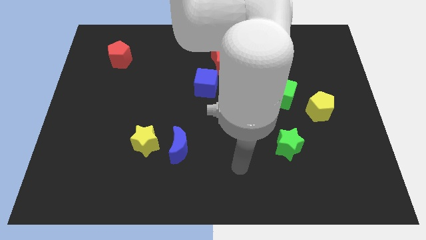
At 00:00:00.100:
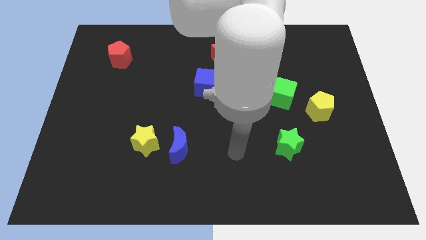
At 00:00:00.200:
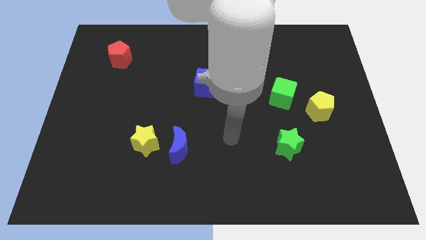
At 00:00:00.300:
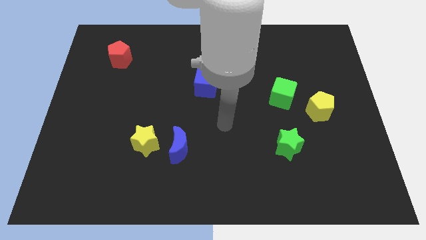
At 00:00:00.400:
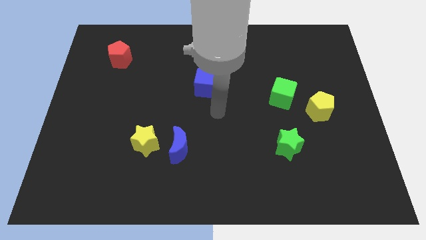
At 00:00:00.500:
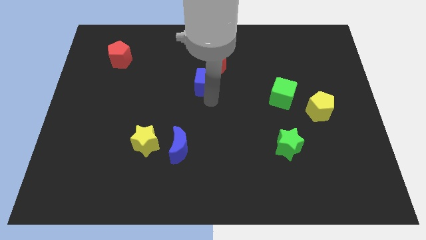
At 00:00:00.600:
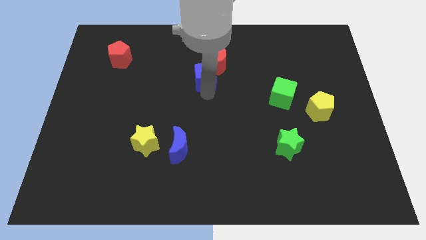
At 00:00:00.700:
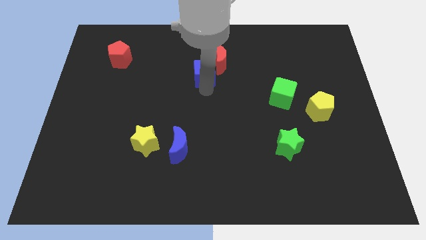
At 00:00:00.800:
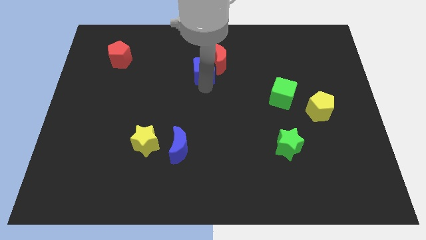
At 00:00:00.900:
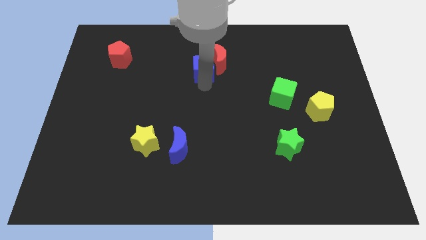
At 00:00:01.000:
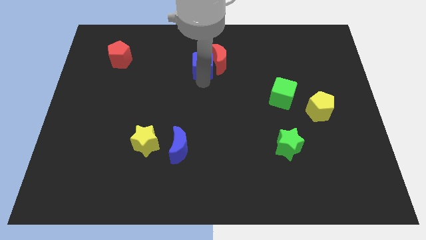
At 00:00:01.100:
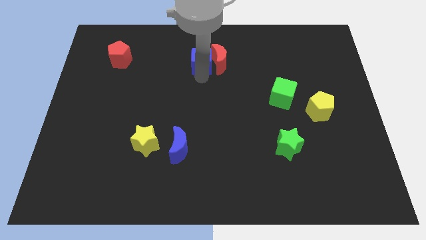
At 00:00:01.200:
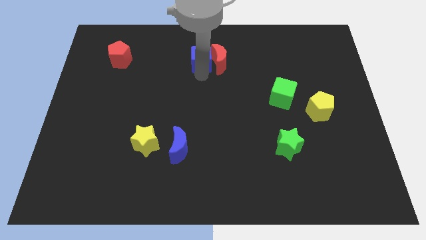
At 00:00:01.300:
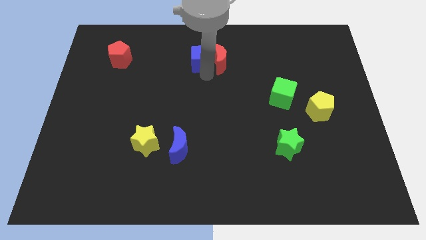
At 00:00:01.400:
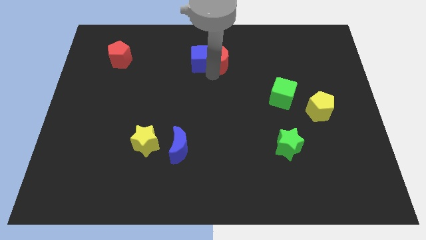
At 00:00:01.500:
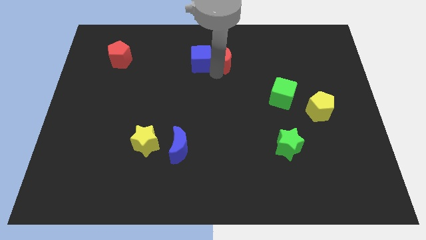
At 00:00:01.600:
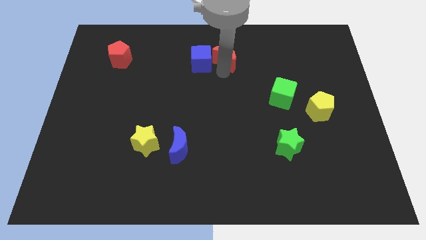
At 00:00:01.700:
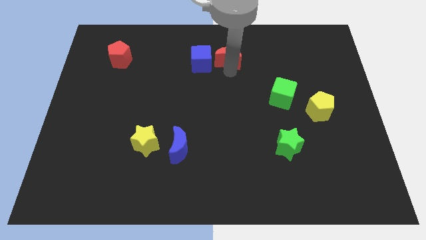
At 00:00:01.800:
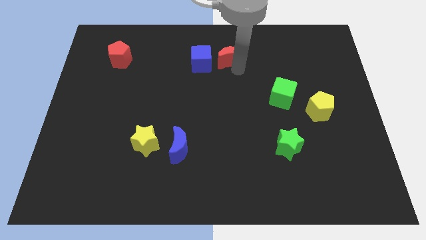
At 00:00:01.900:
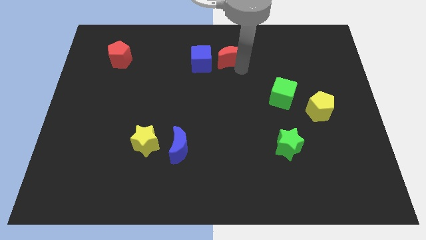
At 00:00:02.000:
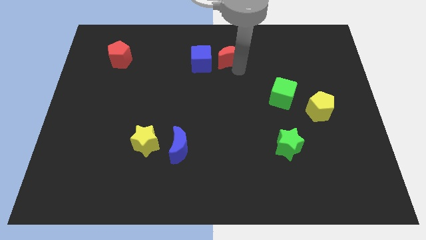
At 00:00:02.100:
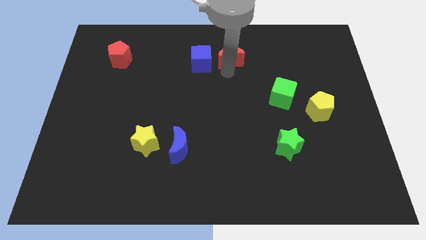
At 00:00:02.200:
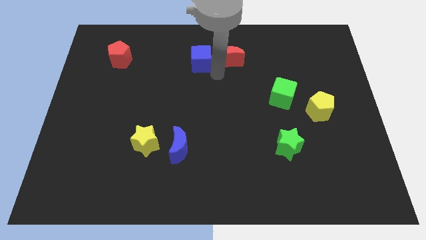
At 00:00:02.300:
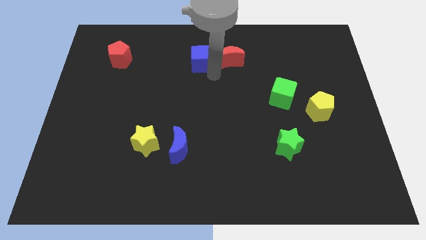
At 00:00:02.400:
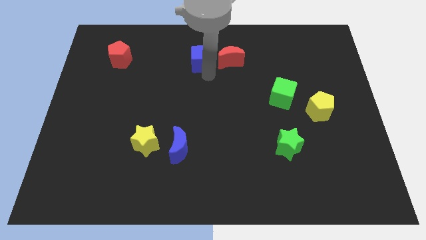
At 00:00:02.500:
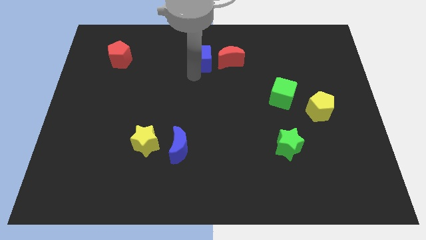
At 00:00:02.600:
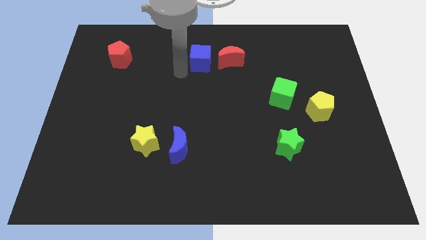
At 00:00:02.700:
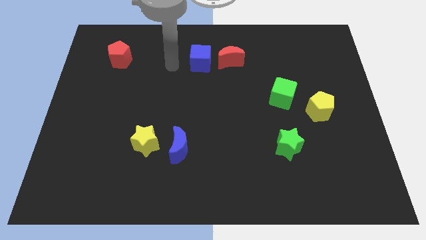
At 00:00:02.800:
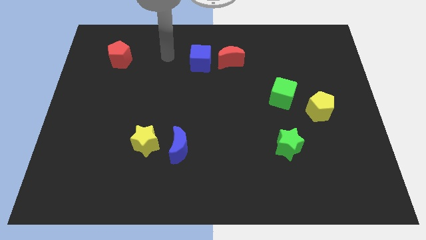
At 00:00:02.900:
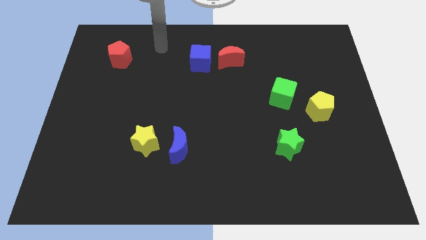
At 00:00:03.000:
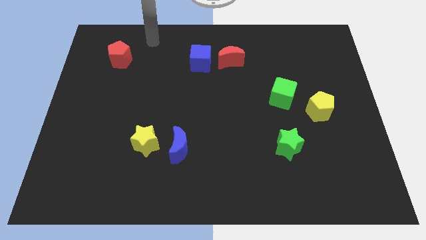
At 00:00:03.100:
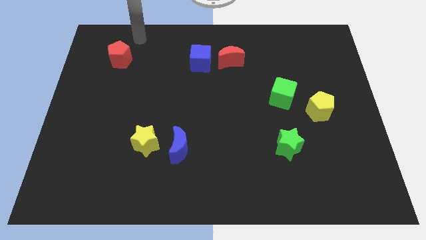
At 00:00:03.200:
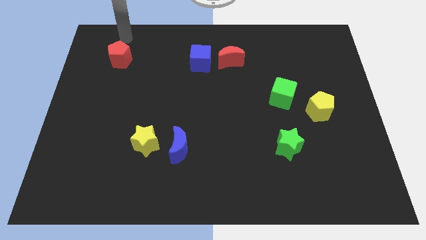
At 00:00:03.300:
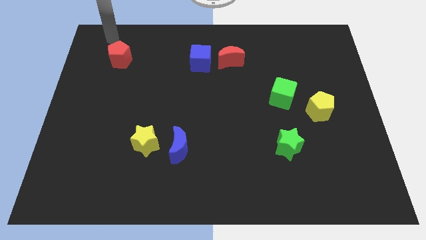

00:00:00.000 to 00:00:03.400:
move the blue cube and red moon to the top center

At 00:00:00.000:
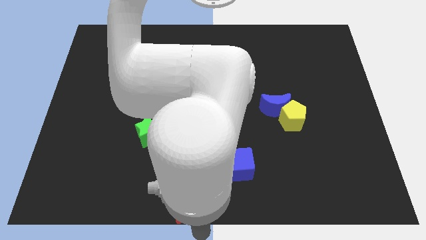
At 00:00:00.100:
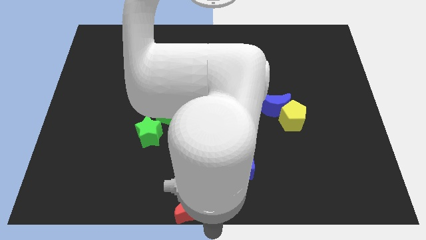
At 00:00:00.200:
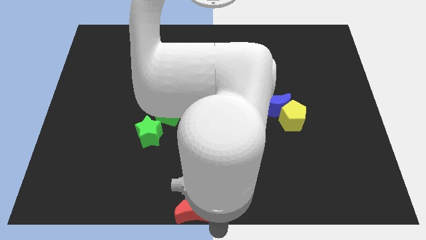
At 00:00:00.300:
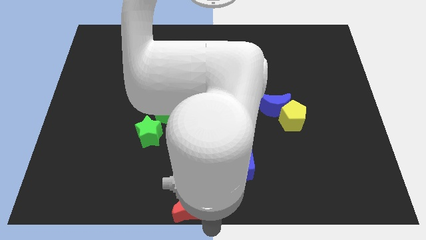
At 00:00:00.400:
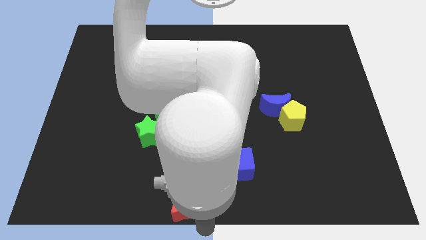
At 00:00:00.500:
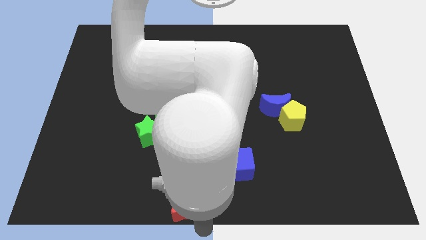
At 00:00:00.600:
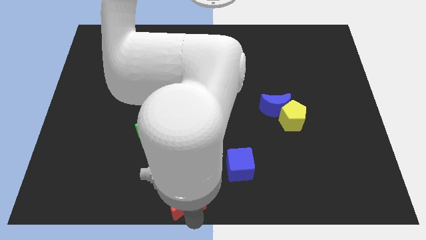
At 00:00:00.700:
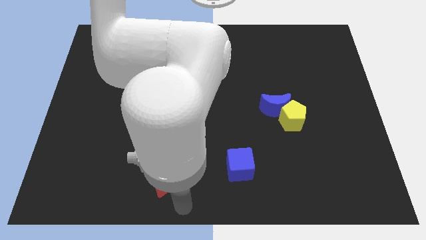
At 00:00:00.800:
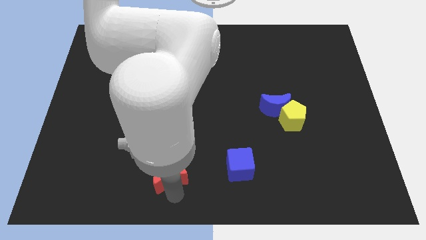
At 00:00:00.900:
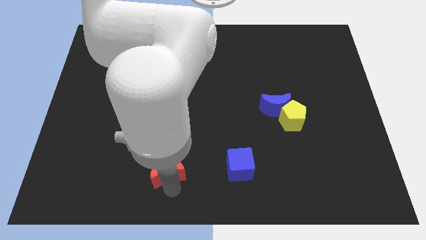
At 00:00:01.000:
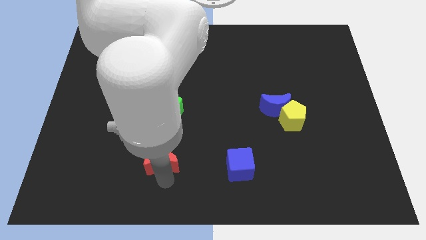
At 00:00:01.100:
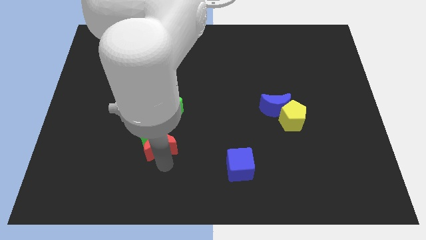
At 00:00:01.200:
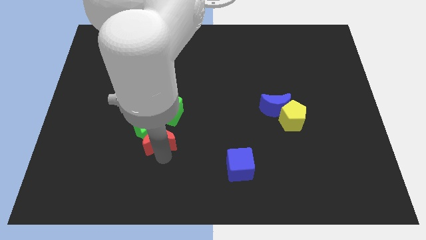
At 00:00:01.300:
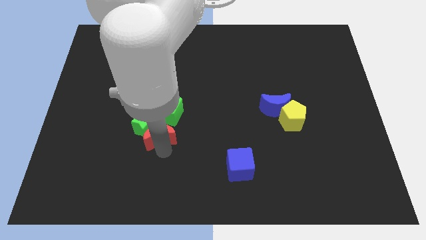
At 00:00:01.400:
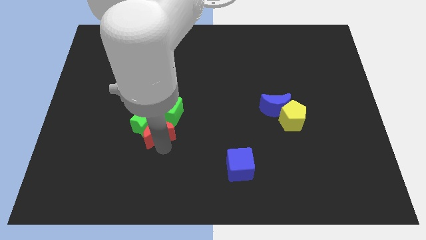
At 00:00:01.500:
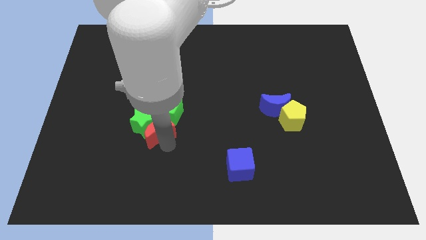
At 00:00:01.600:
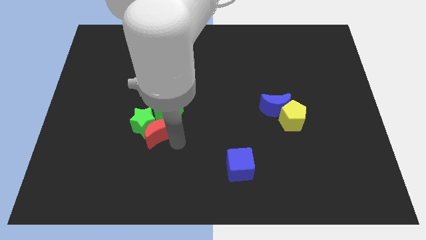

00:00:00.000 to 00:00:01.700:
move the red crescent to the green star

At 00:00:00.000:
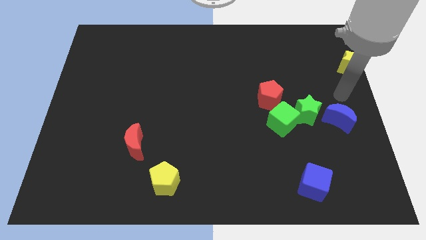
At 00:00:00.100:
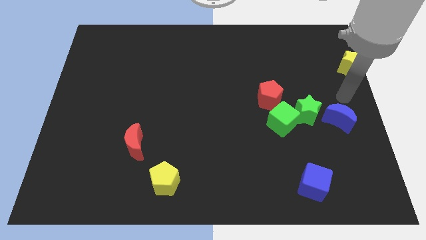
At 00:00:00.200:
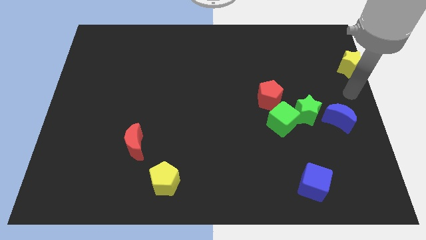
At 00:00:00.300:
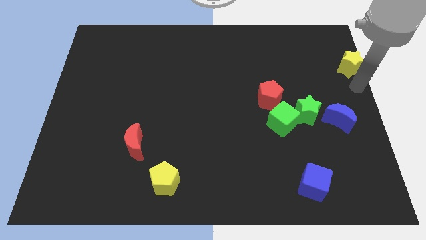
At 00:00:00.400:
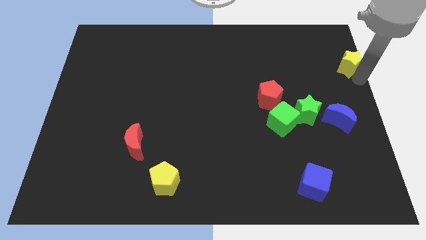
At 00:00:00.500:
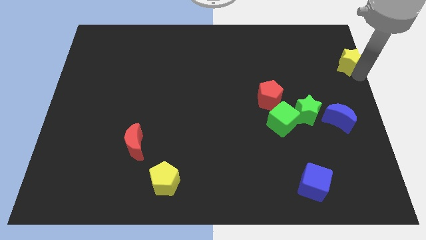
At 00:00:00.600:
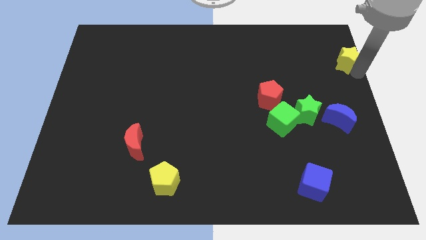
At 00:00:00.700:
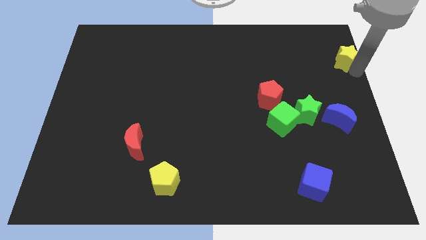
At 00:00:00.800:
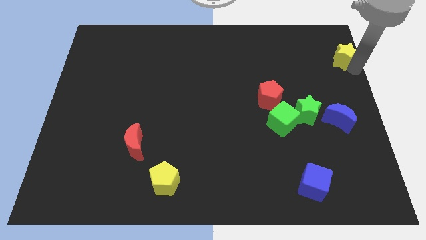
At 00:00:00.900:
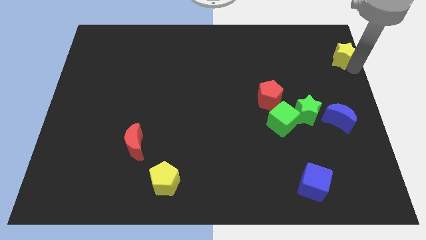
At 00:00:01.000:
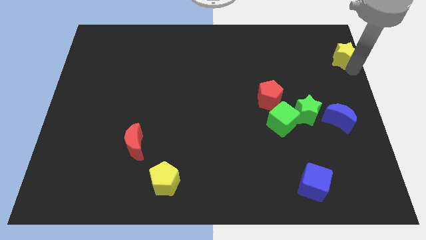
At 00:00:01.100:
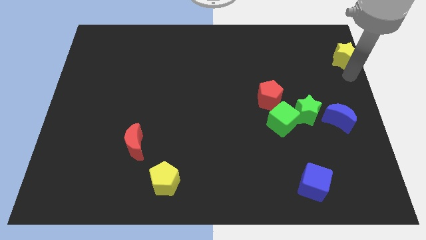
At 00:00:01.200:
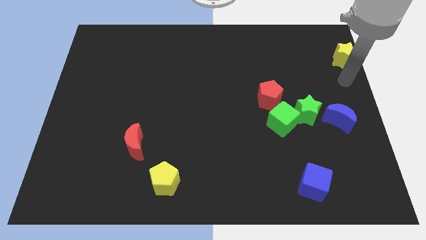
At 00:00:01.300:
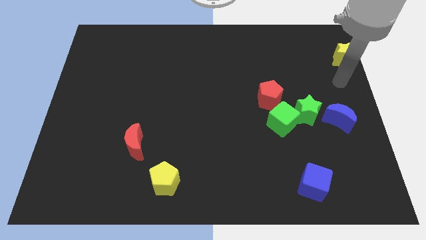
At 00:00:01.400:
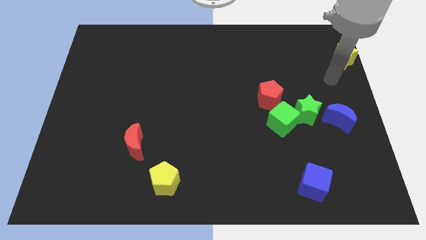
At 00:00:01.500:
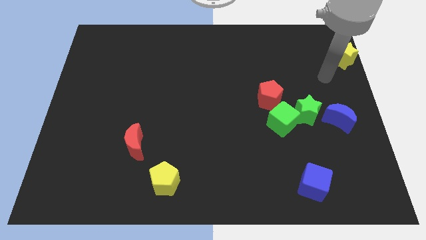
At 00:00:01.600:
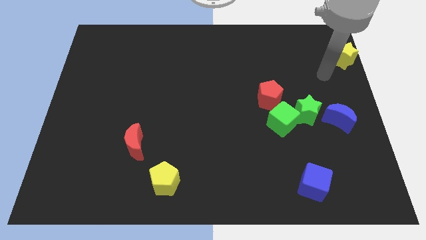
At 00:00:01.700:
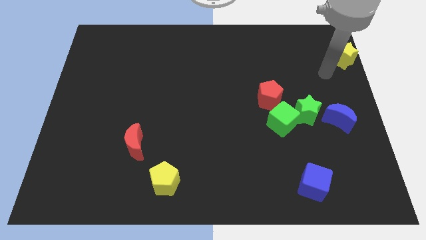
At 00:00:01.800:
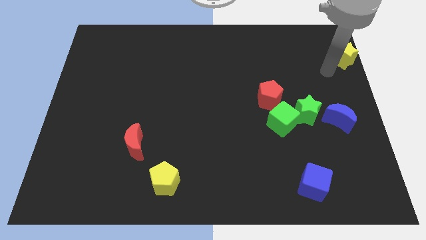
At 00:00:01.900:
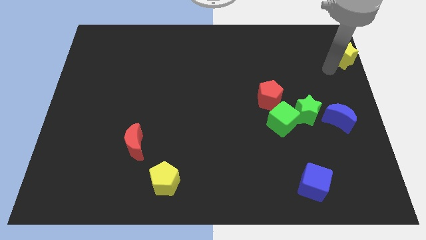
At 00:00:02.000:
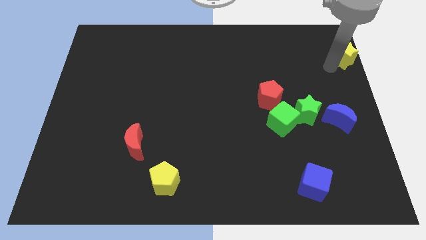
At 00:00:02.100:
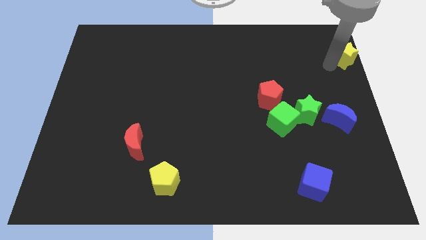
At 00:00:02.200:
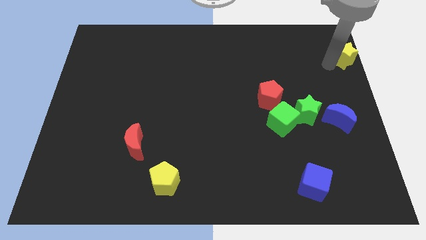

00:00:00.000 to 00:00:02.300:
push the yellow star towards the top right

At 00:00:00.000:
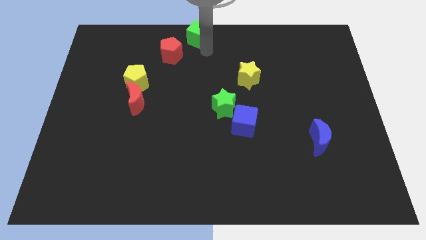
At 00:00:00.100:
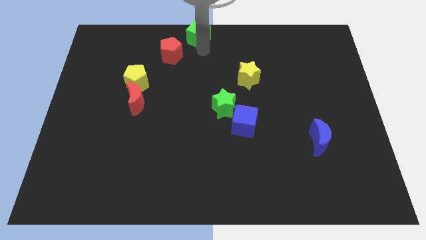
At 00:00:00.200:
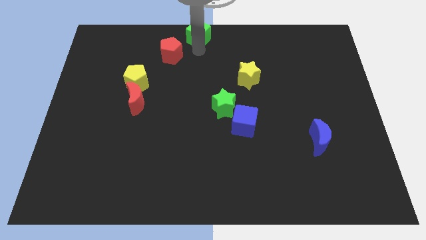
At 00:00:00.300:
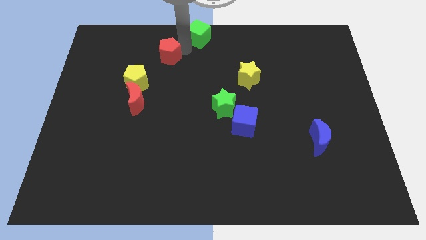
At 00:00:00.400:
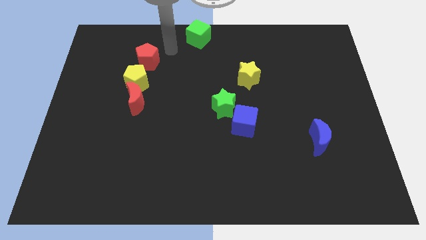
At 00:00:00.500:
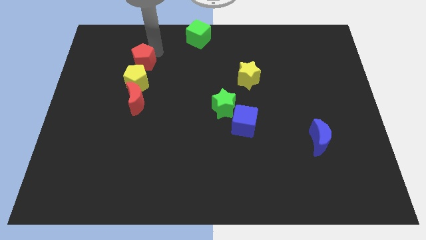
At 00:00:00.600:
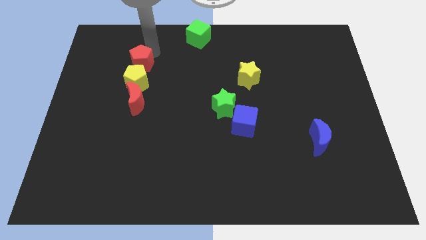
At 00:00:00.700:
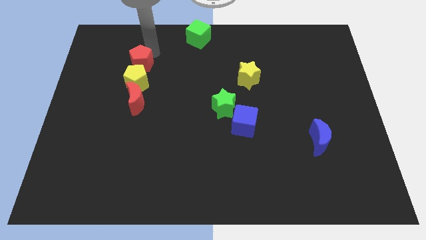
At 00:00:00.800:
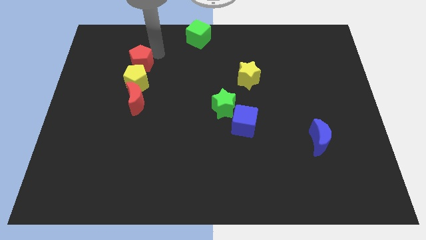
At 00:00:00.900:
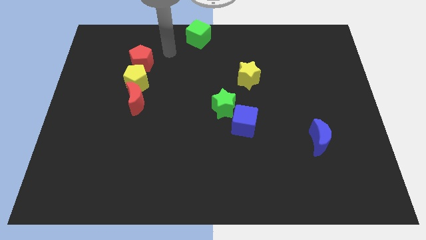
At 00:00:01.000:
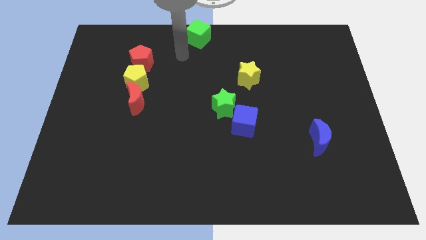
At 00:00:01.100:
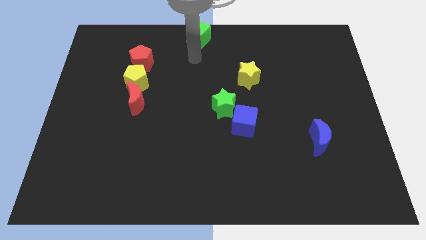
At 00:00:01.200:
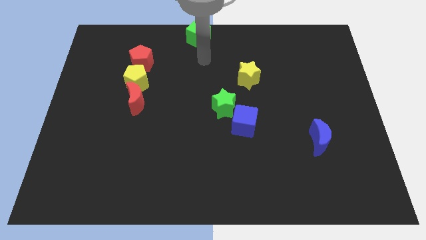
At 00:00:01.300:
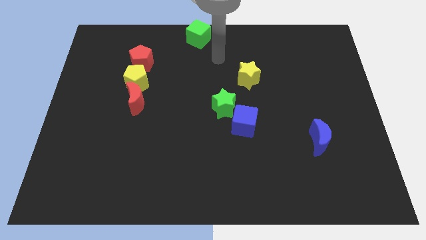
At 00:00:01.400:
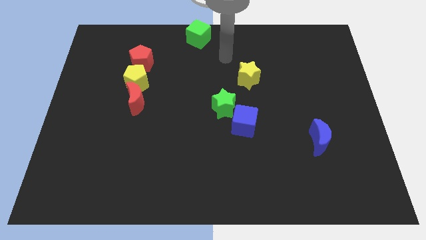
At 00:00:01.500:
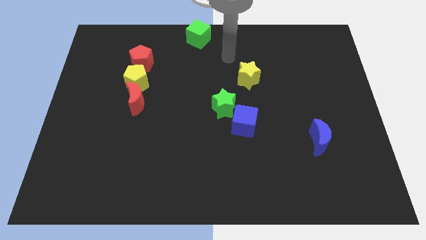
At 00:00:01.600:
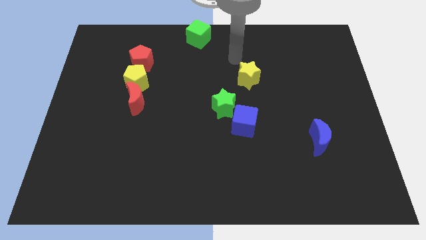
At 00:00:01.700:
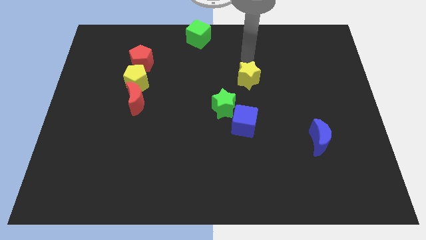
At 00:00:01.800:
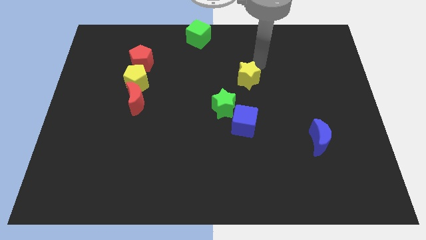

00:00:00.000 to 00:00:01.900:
move the red pentagon above the yellow pentagon
